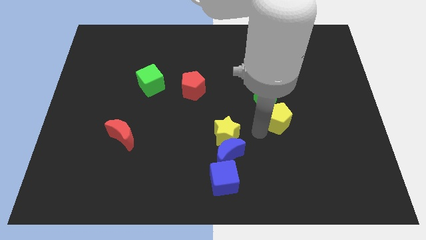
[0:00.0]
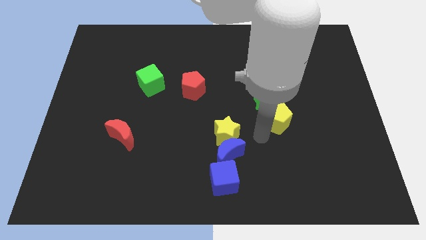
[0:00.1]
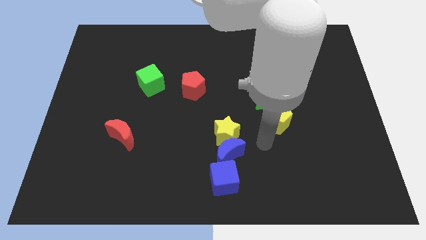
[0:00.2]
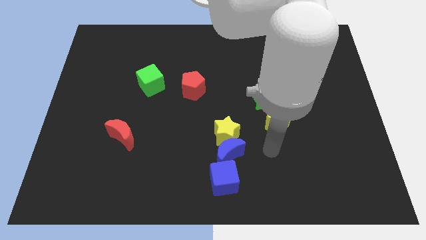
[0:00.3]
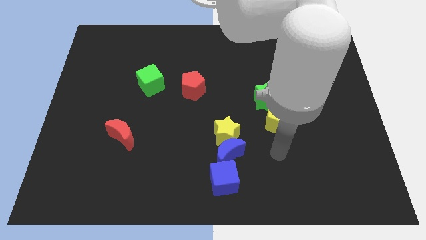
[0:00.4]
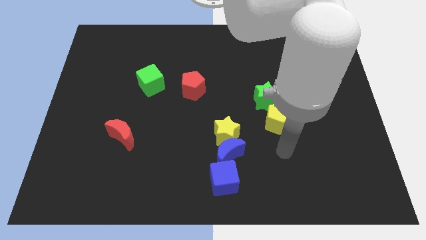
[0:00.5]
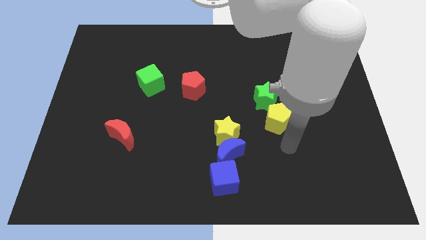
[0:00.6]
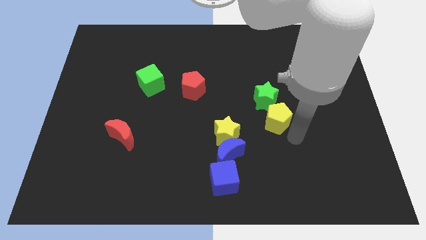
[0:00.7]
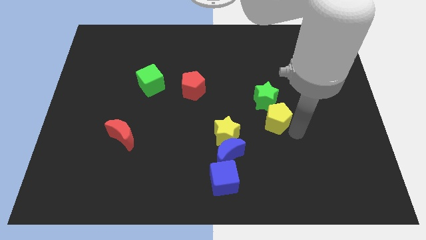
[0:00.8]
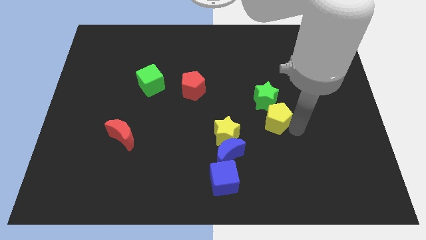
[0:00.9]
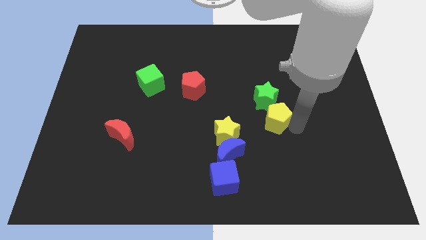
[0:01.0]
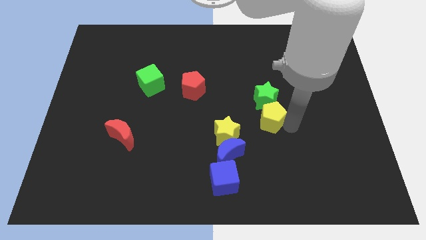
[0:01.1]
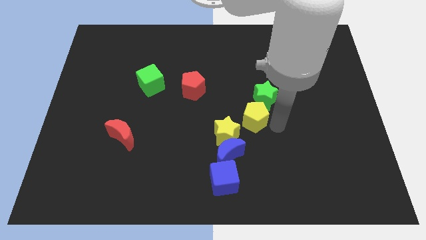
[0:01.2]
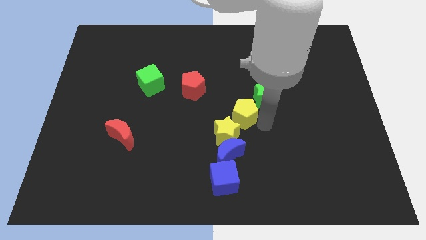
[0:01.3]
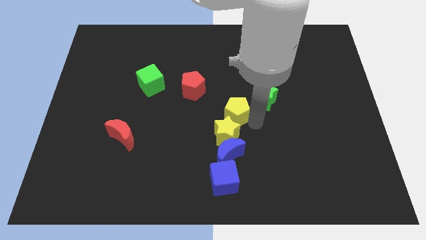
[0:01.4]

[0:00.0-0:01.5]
push the yellow pentagon to the top right of the yellow star

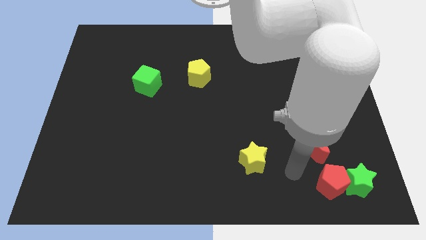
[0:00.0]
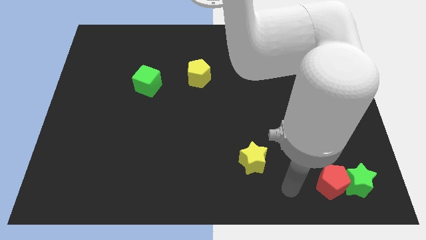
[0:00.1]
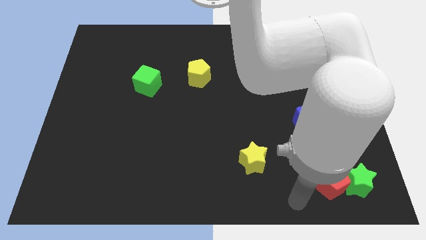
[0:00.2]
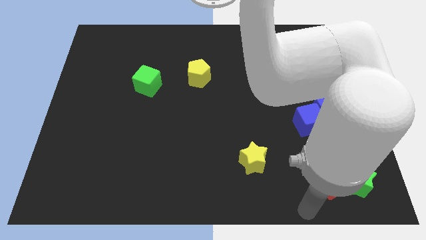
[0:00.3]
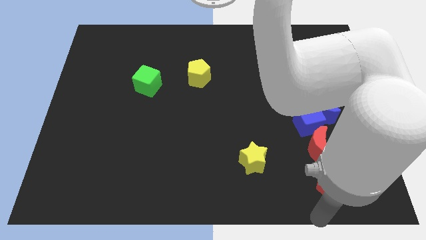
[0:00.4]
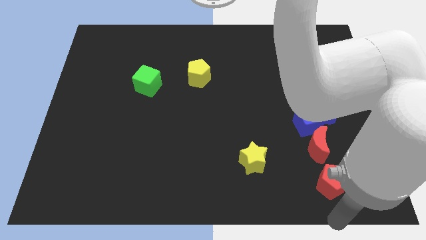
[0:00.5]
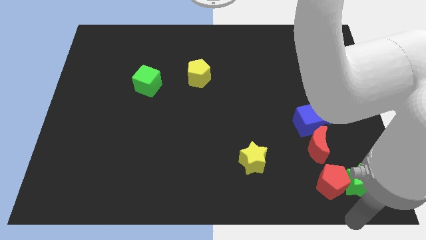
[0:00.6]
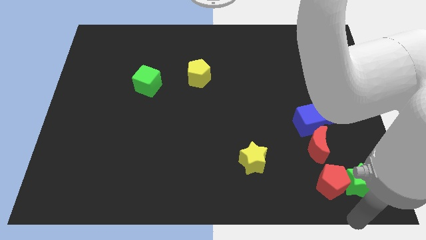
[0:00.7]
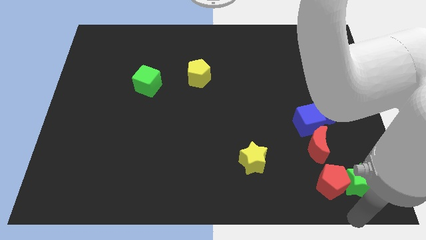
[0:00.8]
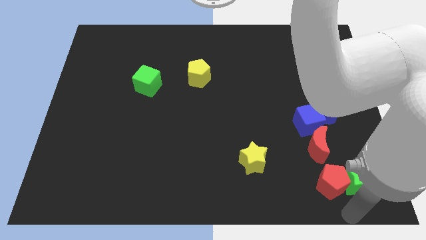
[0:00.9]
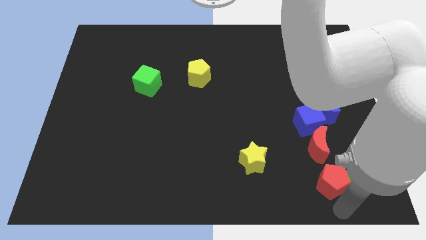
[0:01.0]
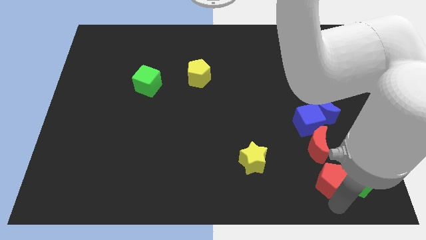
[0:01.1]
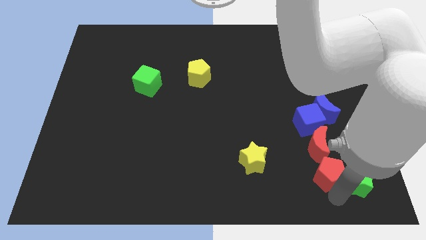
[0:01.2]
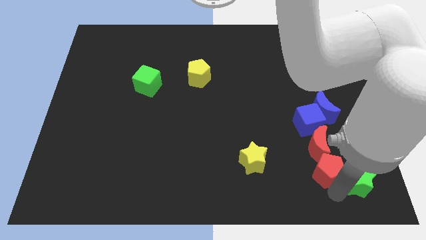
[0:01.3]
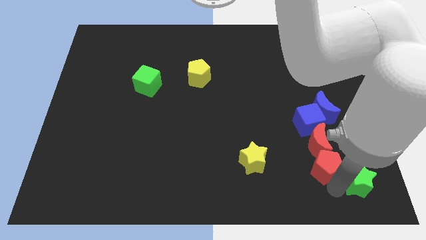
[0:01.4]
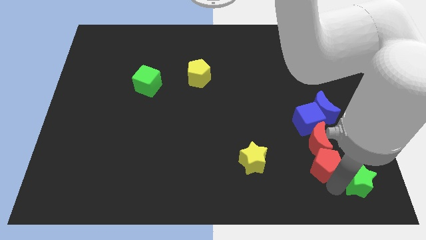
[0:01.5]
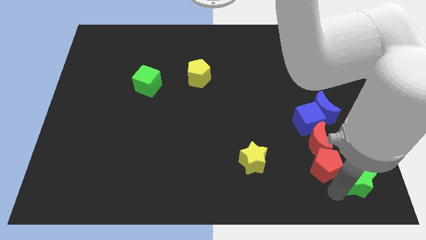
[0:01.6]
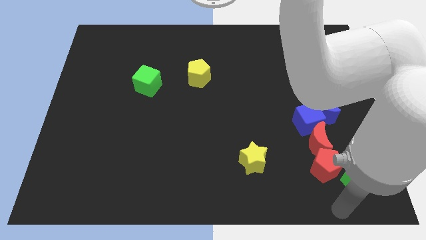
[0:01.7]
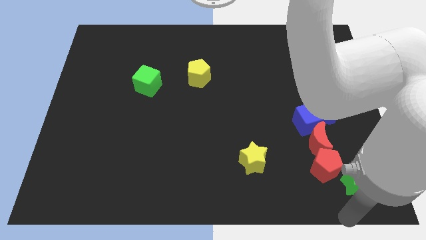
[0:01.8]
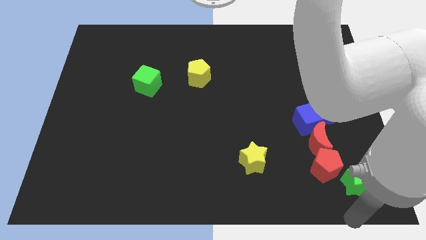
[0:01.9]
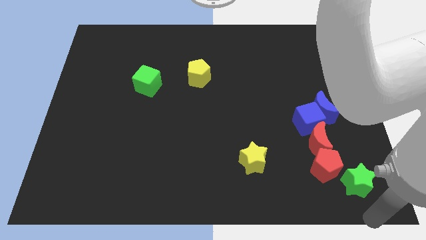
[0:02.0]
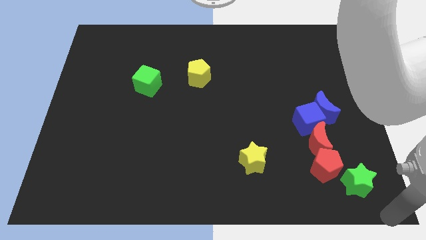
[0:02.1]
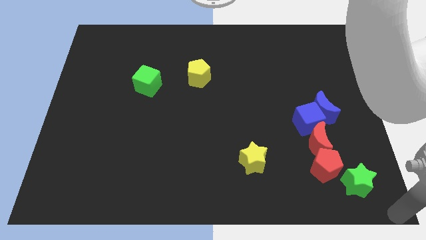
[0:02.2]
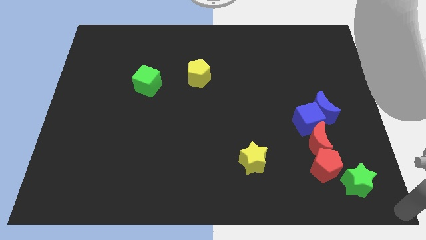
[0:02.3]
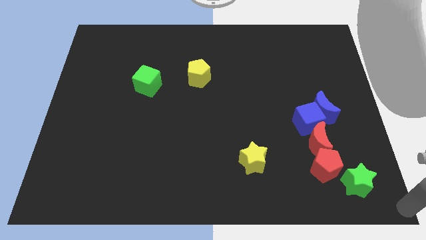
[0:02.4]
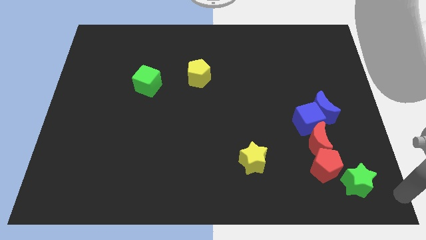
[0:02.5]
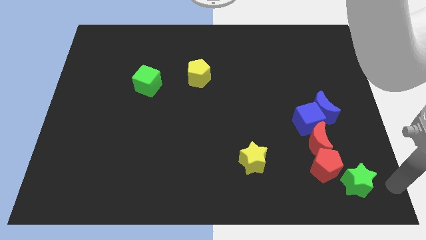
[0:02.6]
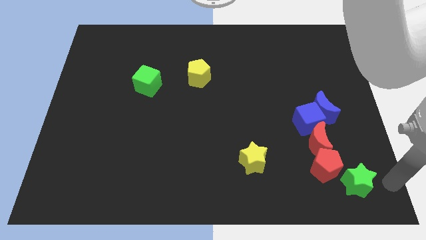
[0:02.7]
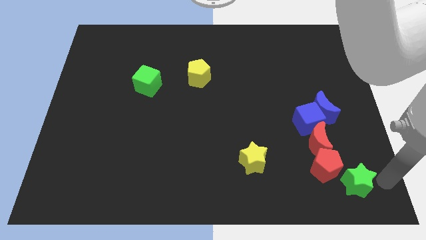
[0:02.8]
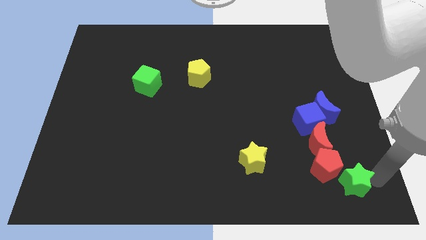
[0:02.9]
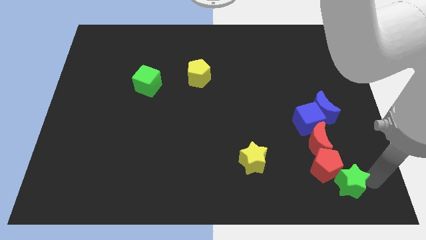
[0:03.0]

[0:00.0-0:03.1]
adjust green star to the bottom of the red pentagon

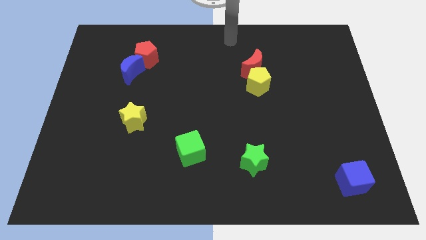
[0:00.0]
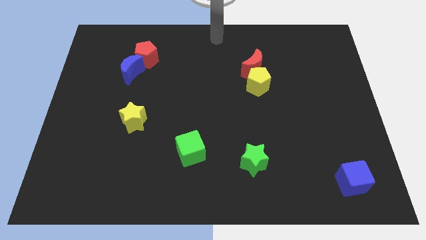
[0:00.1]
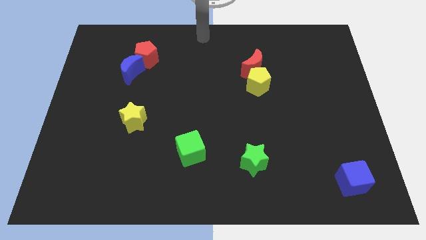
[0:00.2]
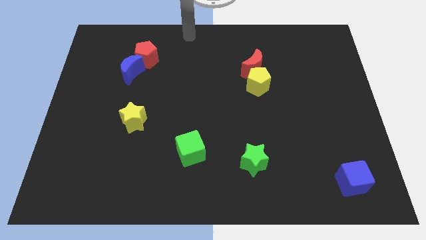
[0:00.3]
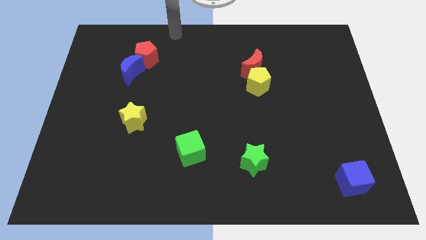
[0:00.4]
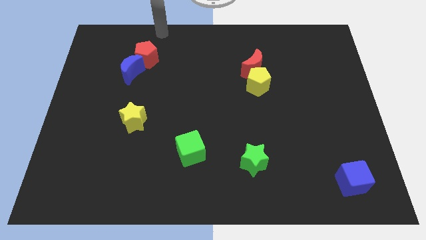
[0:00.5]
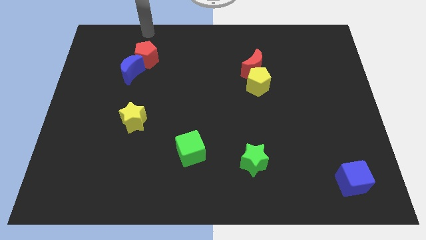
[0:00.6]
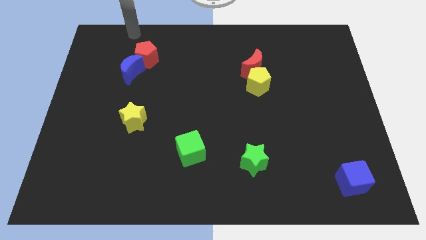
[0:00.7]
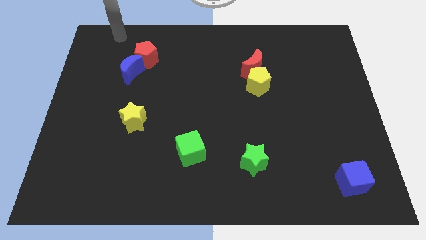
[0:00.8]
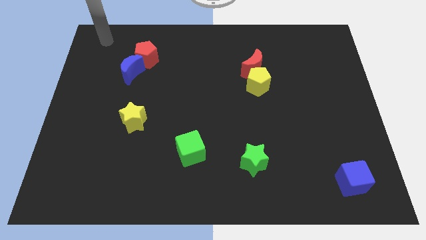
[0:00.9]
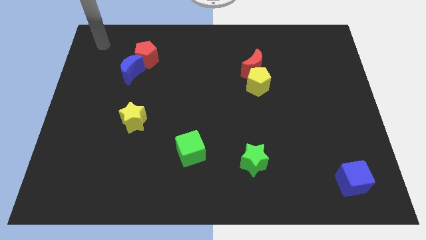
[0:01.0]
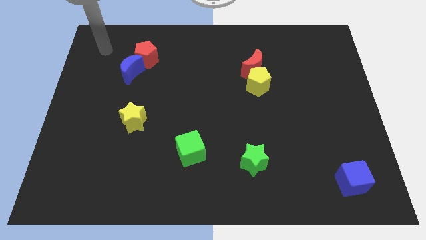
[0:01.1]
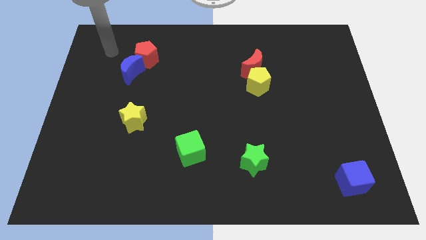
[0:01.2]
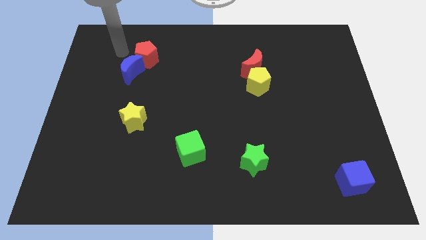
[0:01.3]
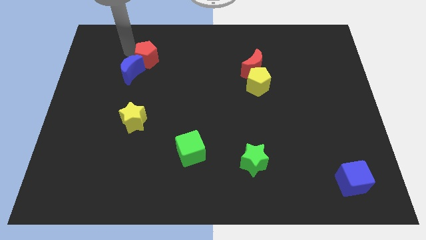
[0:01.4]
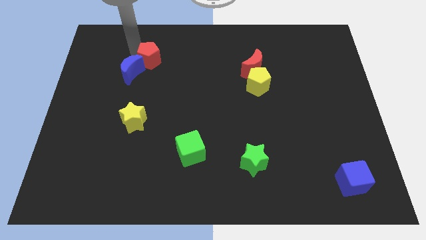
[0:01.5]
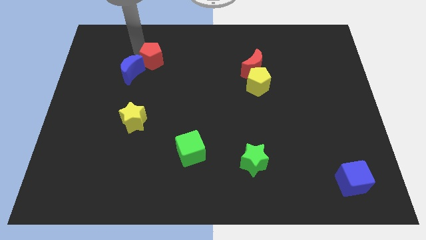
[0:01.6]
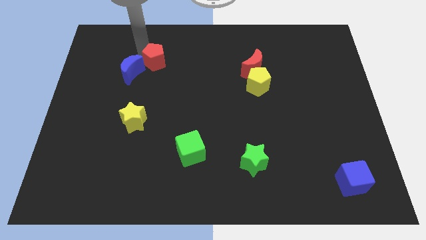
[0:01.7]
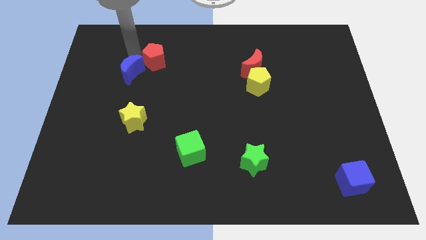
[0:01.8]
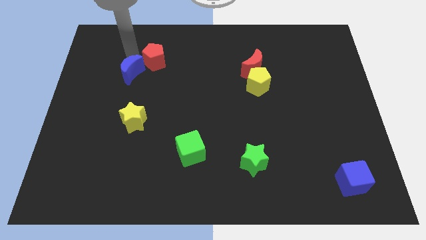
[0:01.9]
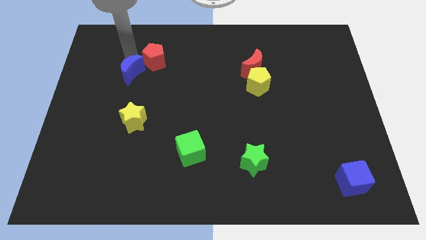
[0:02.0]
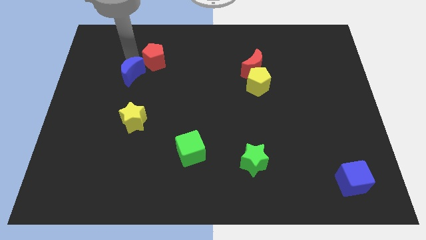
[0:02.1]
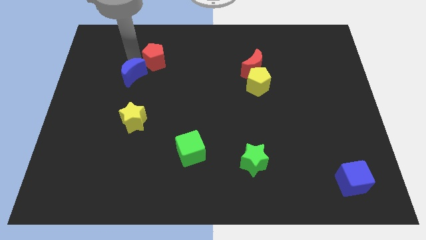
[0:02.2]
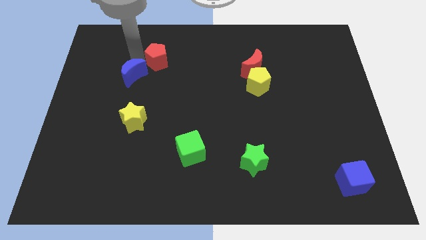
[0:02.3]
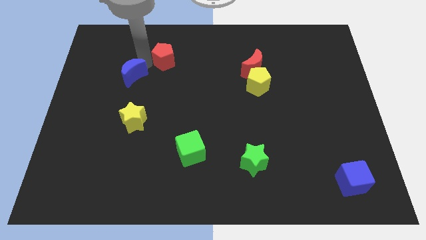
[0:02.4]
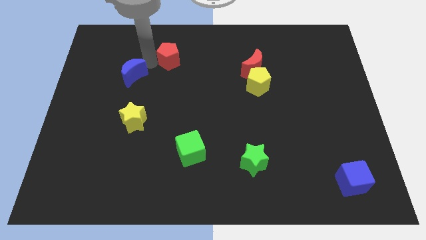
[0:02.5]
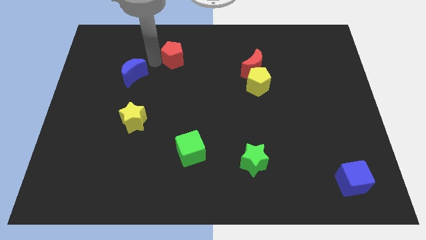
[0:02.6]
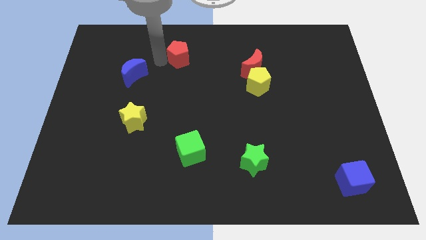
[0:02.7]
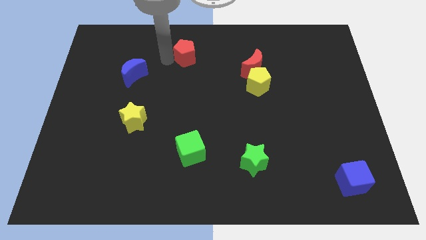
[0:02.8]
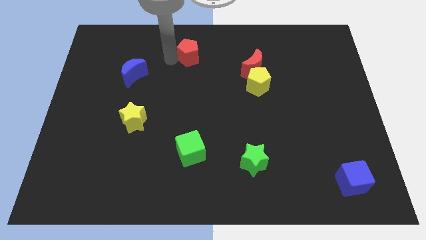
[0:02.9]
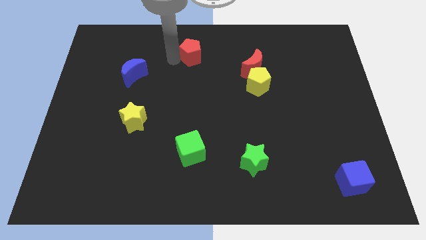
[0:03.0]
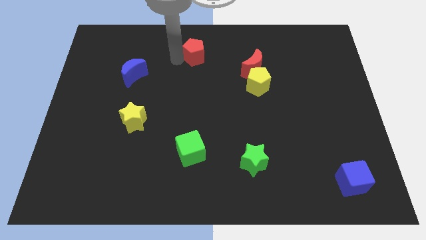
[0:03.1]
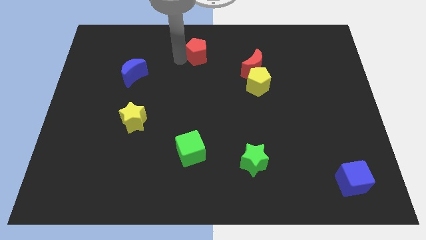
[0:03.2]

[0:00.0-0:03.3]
separate the red pentagon from the blue moon

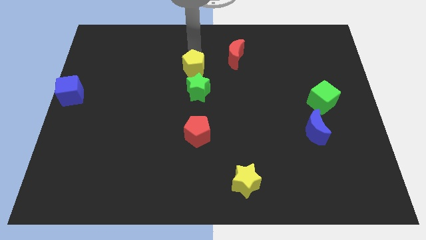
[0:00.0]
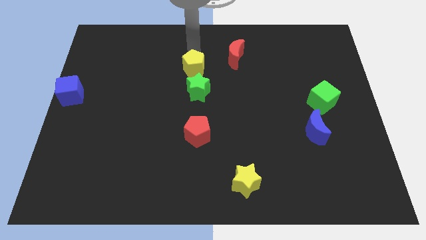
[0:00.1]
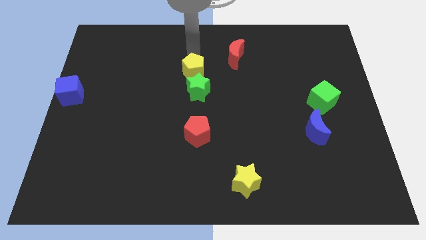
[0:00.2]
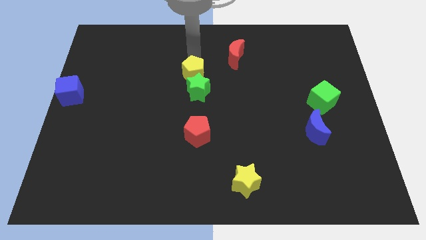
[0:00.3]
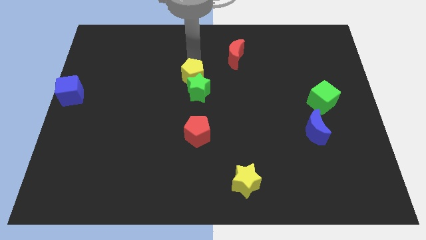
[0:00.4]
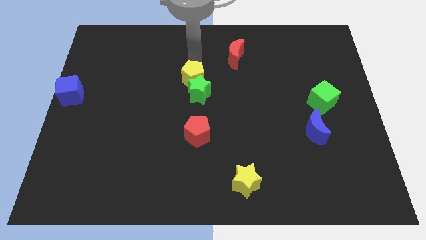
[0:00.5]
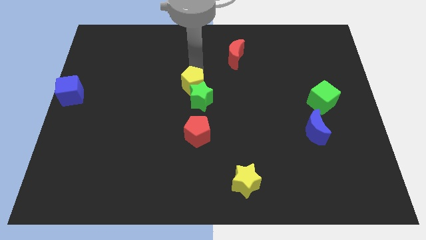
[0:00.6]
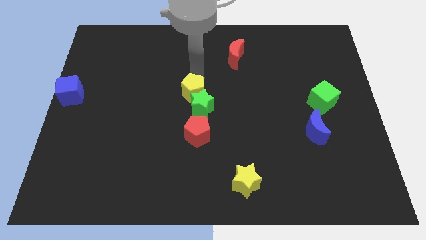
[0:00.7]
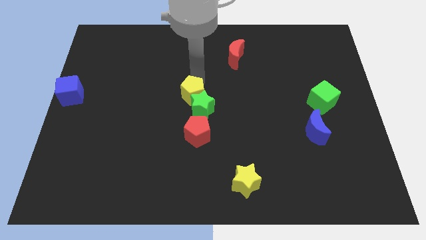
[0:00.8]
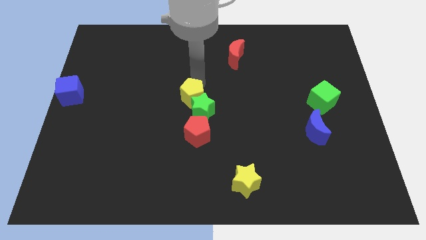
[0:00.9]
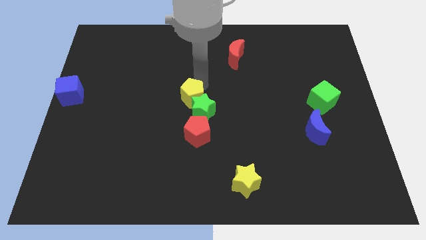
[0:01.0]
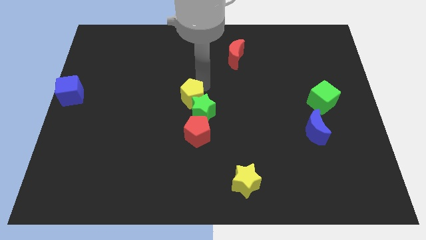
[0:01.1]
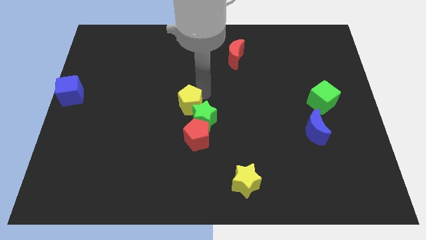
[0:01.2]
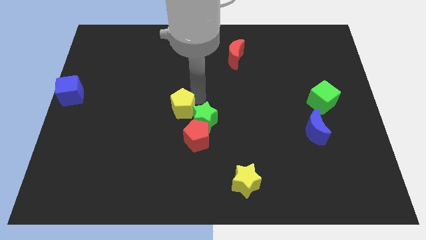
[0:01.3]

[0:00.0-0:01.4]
push the green star with the yellow pentagon
